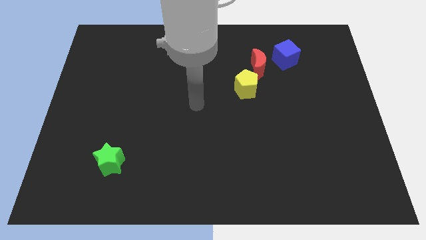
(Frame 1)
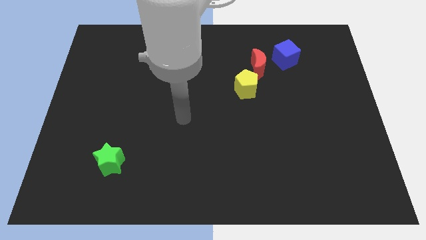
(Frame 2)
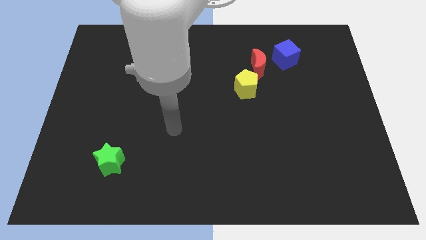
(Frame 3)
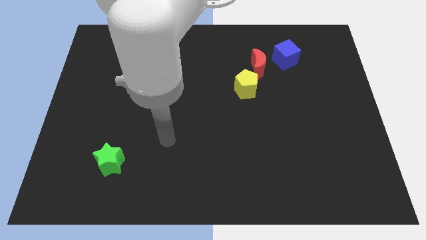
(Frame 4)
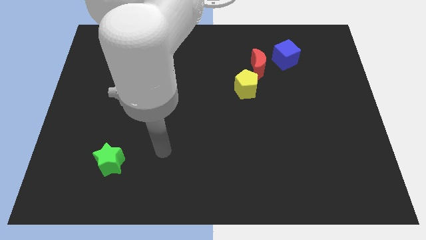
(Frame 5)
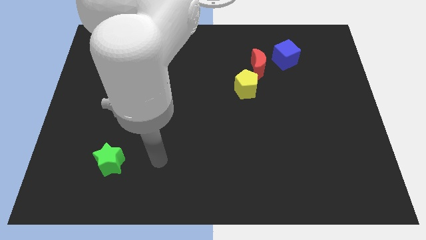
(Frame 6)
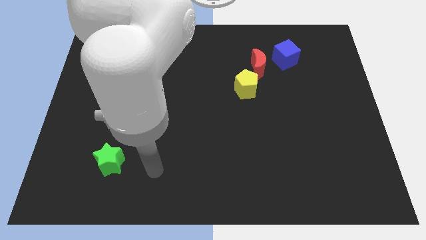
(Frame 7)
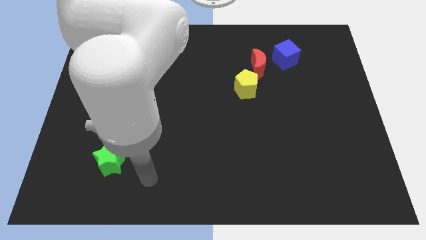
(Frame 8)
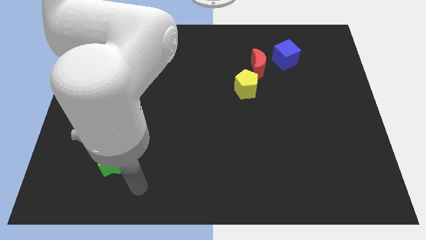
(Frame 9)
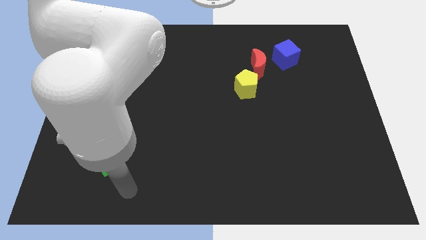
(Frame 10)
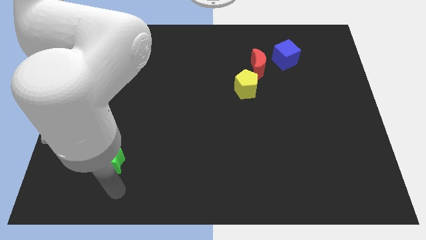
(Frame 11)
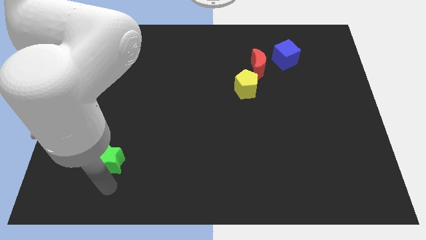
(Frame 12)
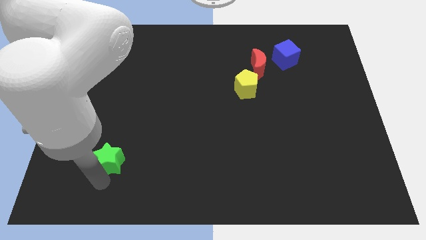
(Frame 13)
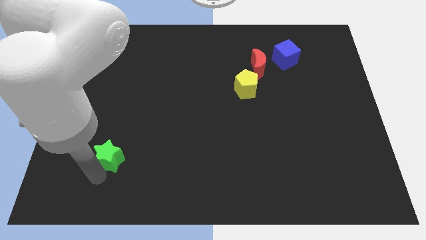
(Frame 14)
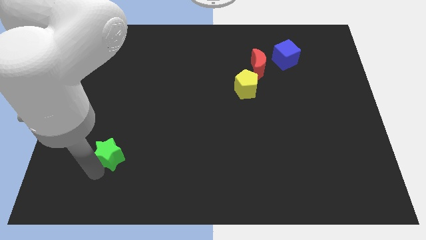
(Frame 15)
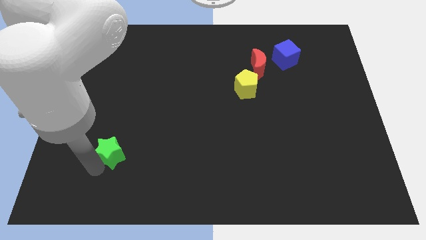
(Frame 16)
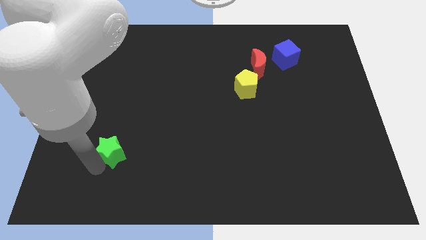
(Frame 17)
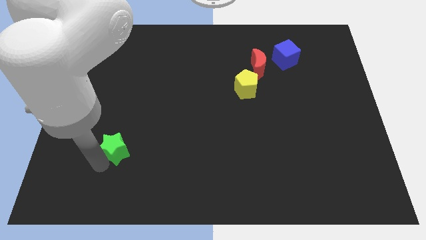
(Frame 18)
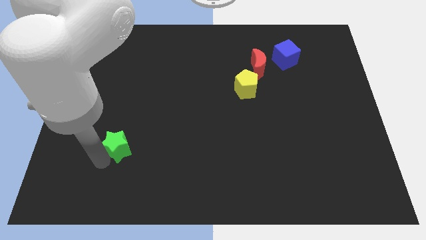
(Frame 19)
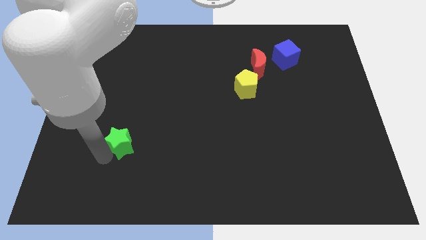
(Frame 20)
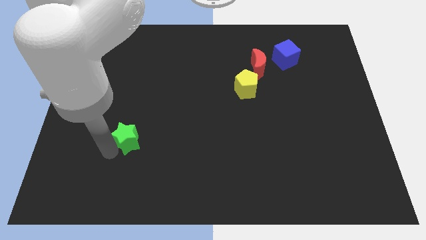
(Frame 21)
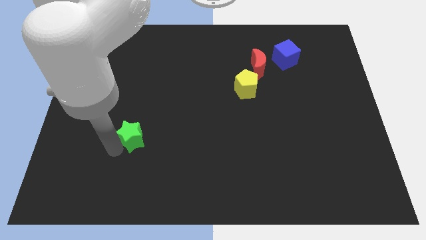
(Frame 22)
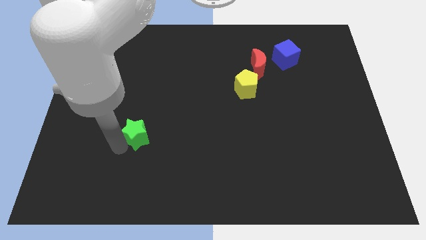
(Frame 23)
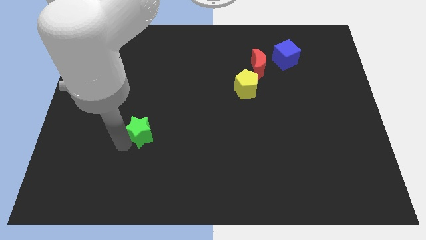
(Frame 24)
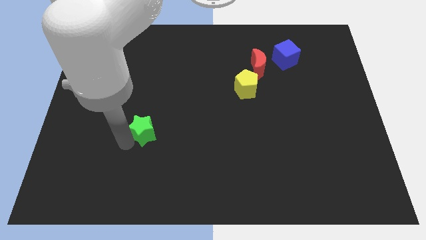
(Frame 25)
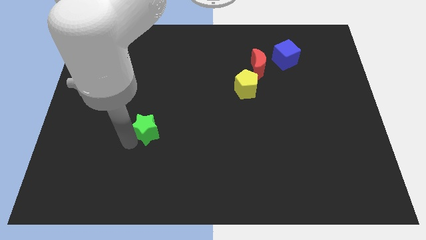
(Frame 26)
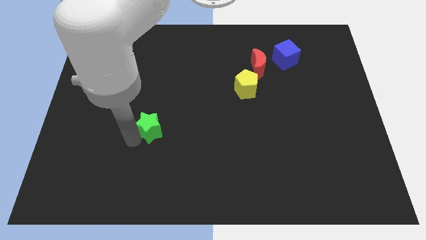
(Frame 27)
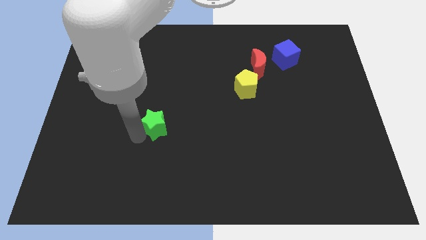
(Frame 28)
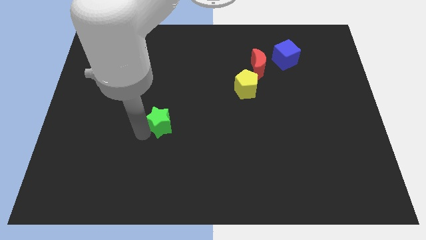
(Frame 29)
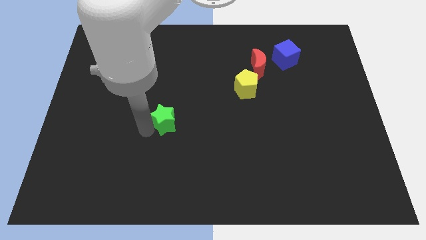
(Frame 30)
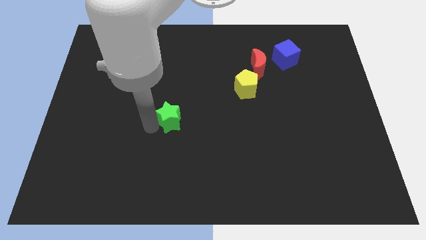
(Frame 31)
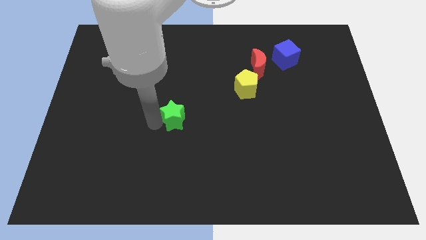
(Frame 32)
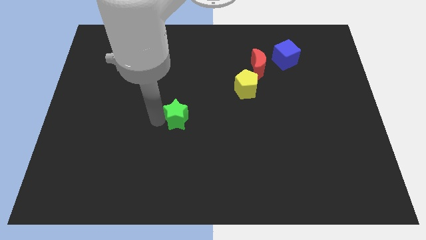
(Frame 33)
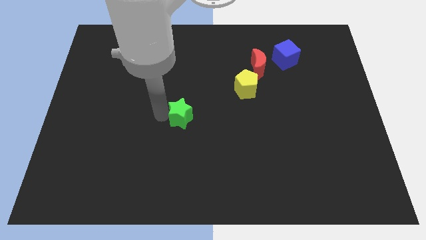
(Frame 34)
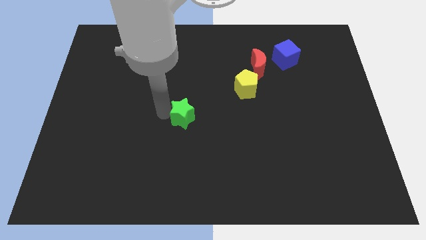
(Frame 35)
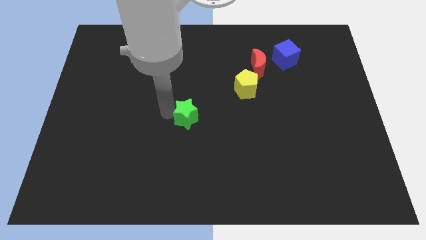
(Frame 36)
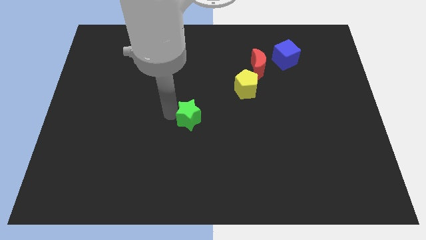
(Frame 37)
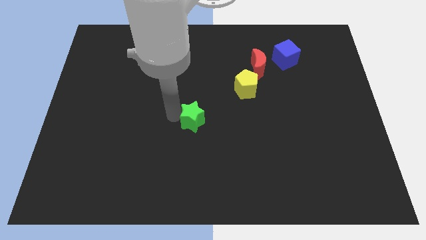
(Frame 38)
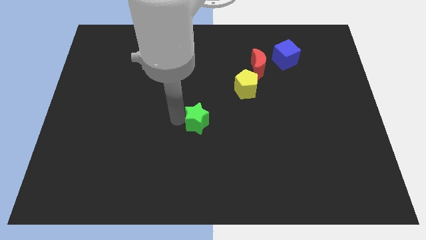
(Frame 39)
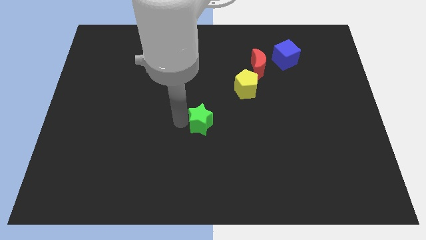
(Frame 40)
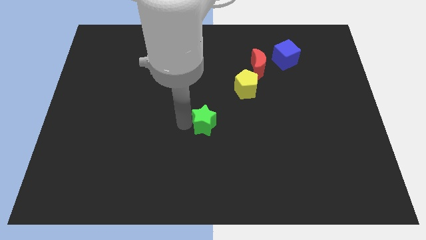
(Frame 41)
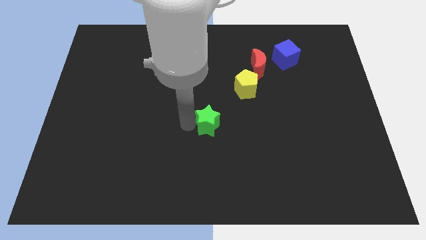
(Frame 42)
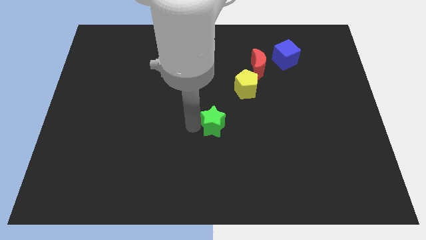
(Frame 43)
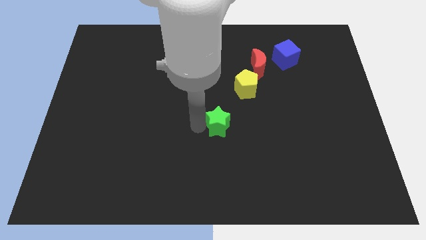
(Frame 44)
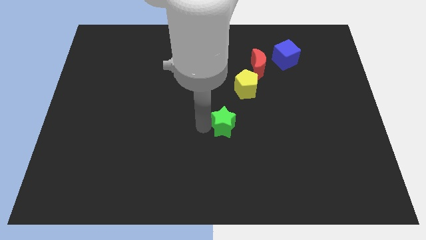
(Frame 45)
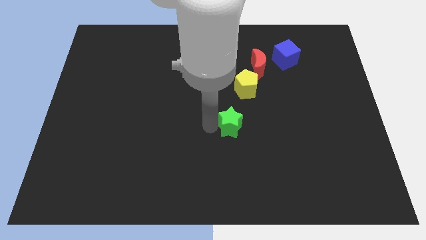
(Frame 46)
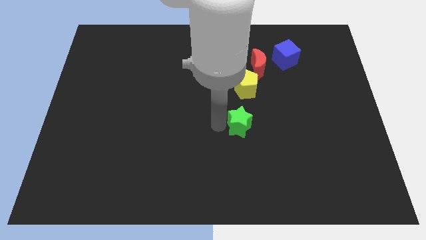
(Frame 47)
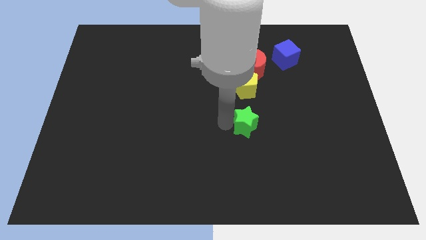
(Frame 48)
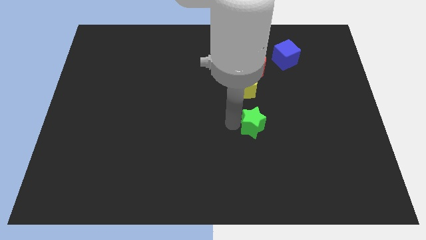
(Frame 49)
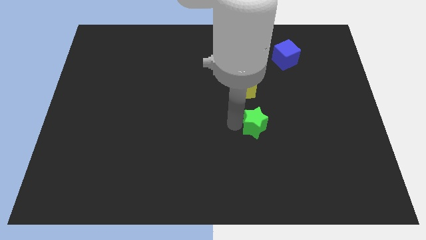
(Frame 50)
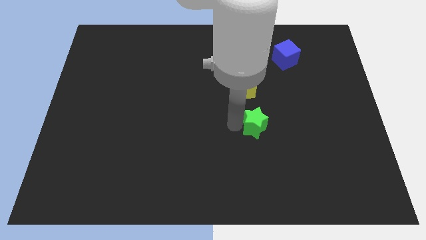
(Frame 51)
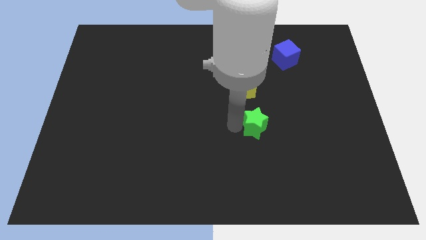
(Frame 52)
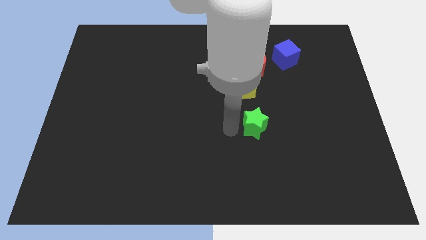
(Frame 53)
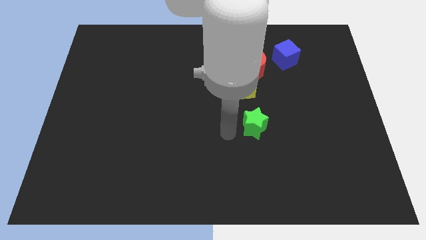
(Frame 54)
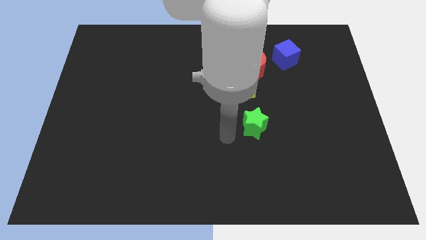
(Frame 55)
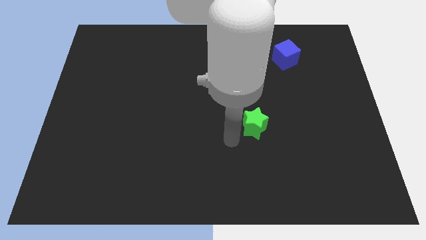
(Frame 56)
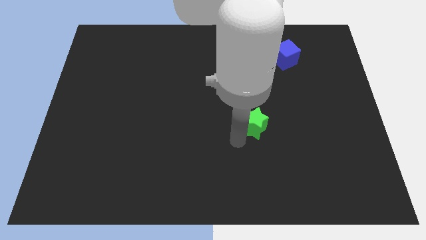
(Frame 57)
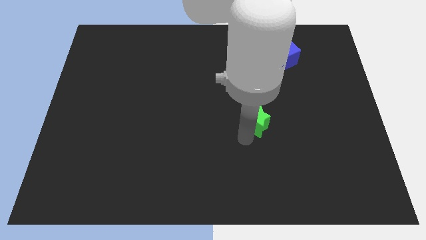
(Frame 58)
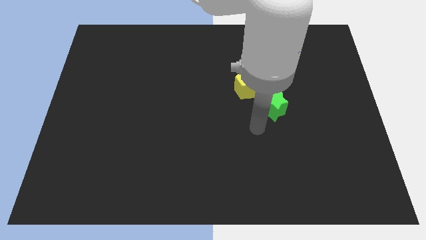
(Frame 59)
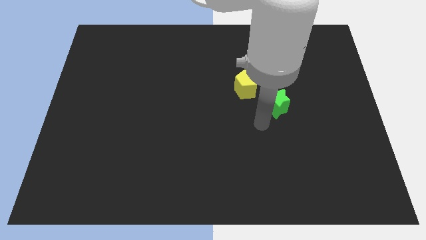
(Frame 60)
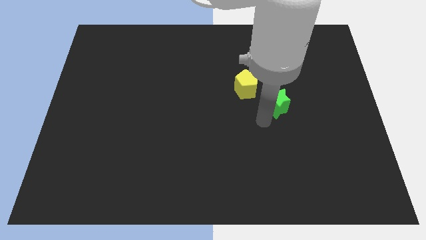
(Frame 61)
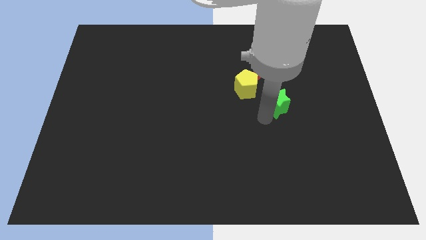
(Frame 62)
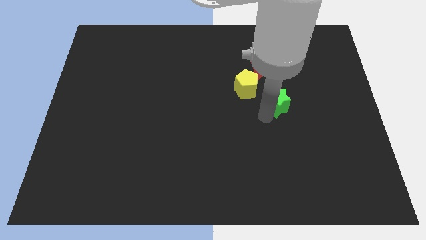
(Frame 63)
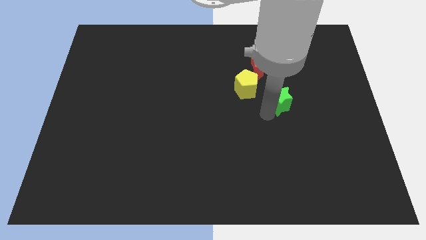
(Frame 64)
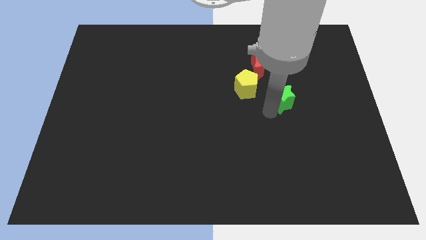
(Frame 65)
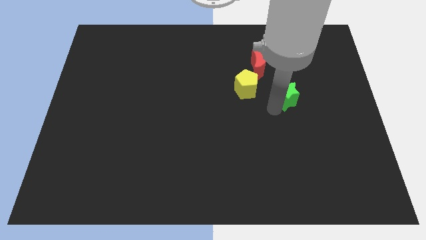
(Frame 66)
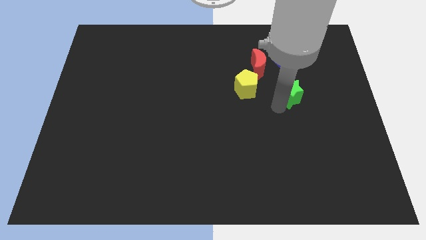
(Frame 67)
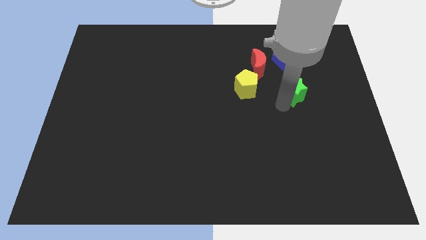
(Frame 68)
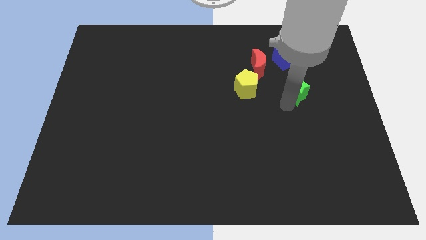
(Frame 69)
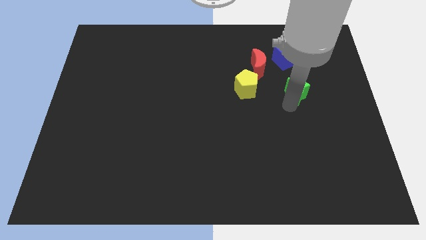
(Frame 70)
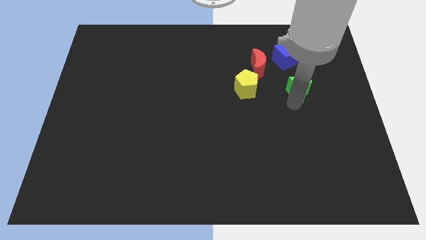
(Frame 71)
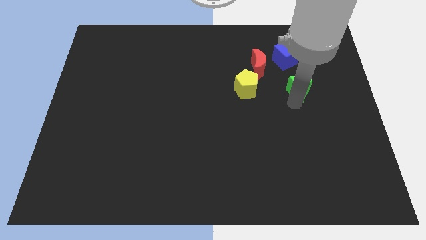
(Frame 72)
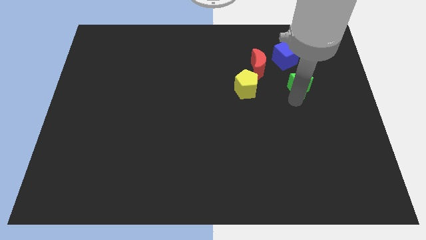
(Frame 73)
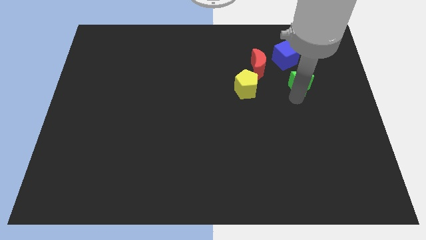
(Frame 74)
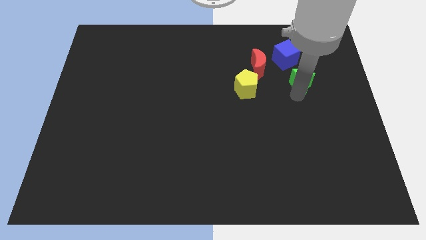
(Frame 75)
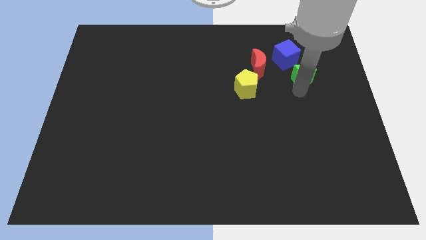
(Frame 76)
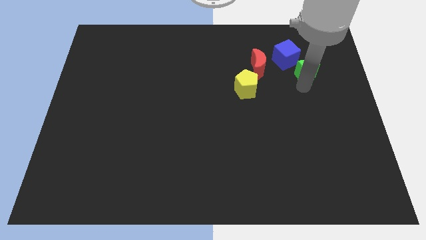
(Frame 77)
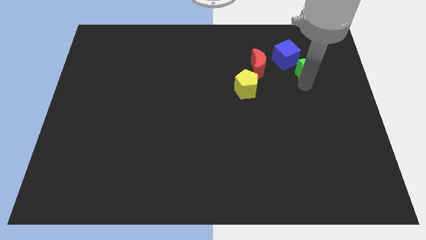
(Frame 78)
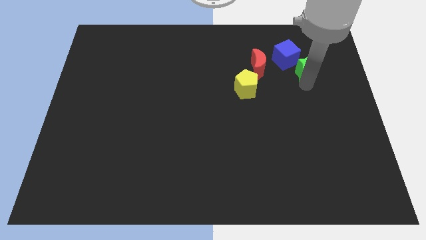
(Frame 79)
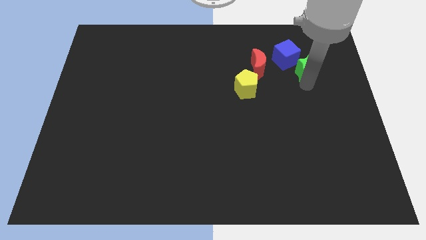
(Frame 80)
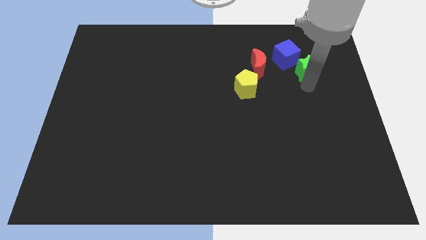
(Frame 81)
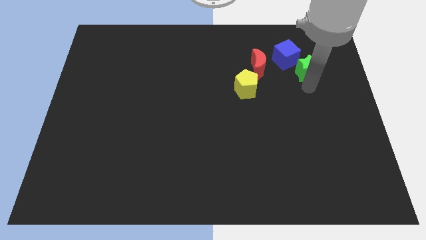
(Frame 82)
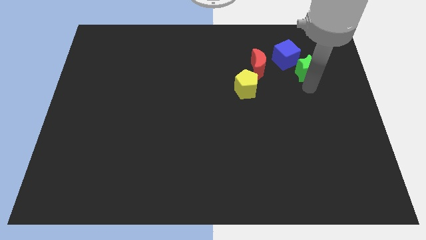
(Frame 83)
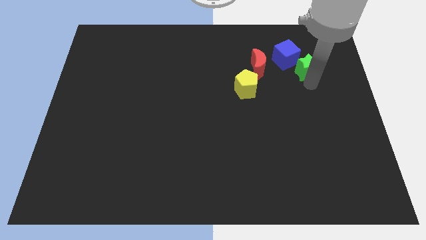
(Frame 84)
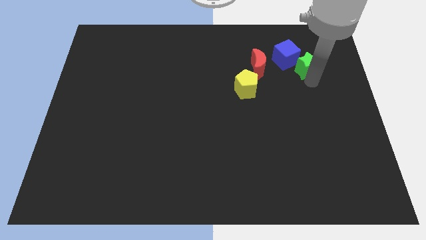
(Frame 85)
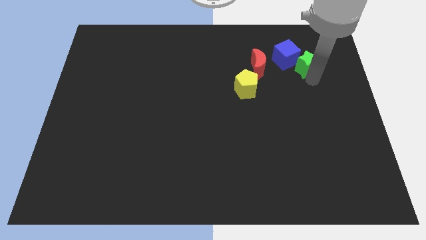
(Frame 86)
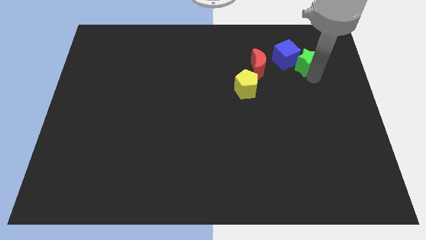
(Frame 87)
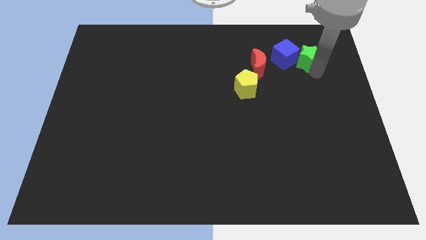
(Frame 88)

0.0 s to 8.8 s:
move the star close to the blue cube
